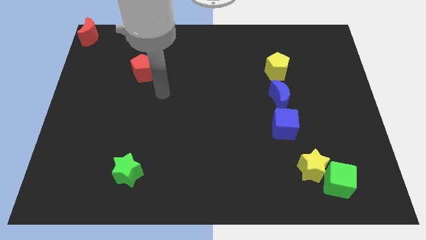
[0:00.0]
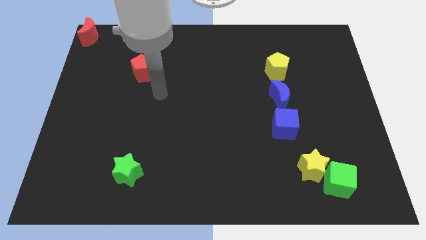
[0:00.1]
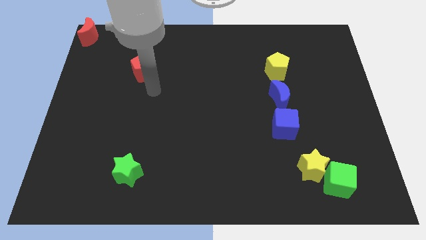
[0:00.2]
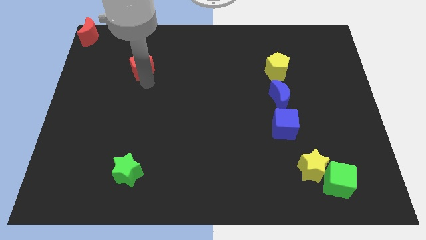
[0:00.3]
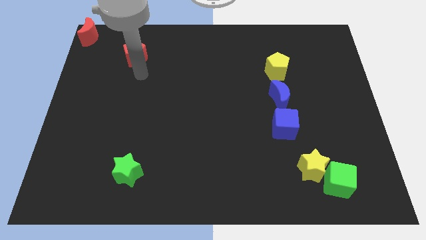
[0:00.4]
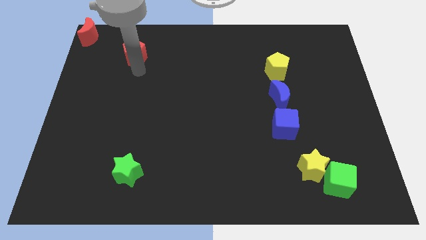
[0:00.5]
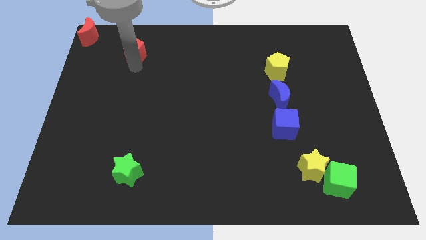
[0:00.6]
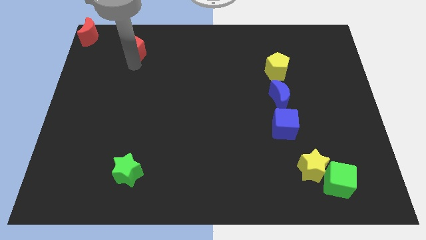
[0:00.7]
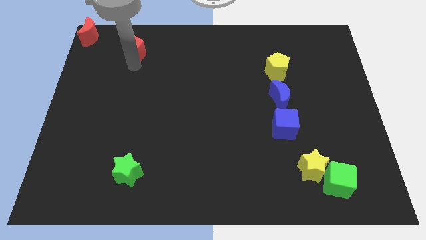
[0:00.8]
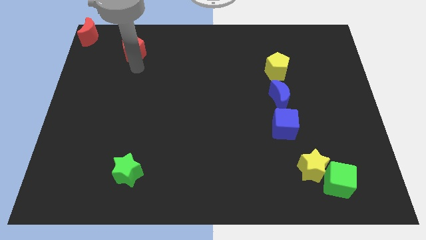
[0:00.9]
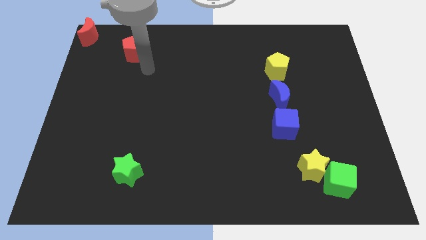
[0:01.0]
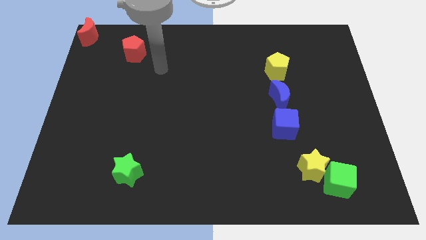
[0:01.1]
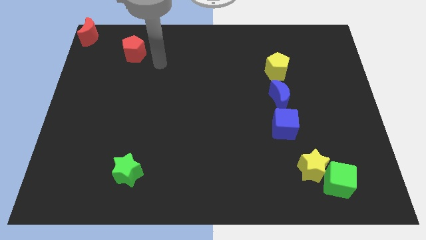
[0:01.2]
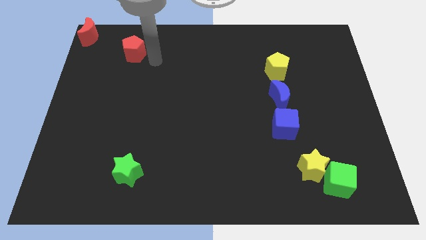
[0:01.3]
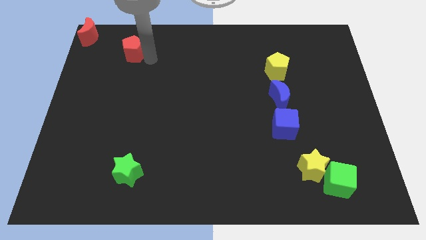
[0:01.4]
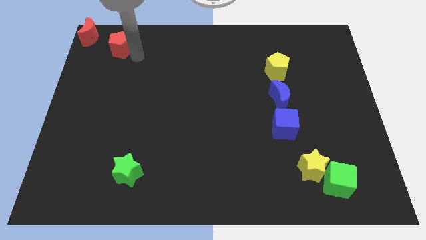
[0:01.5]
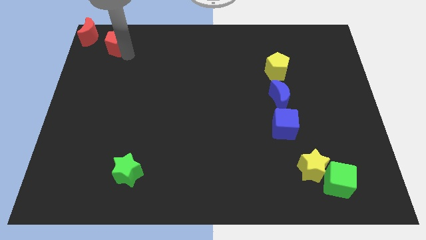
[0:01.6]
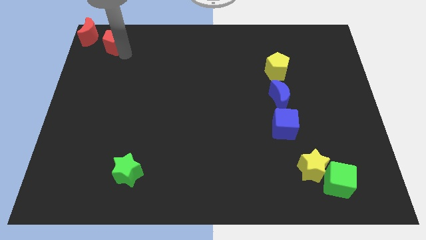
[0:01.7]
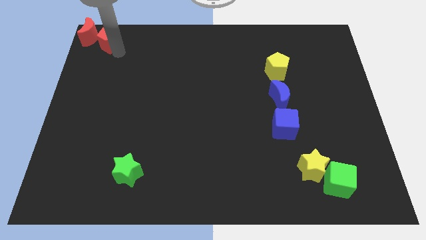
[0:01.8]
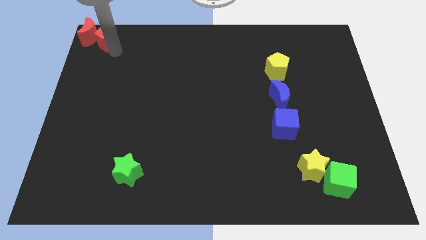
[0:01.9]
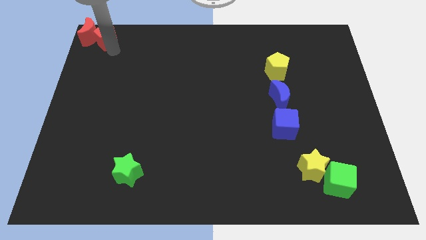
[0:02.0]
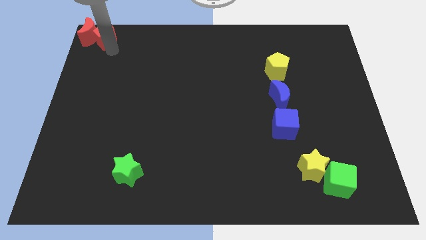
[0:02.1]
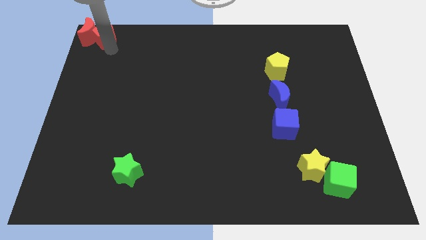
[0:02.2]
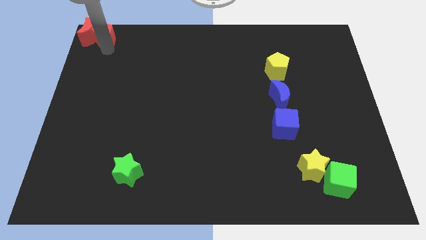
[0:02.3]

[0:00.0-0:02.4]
push the pentagon into the red crescent

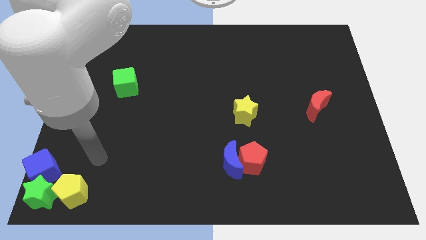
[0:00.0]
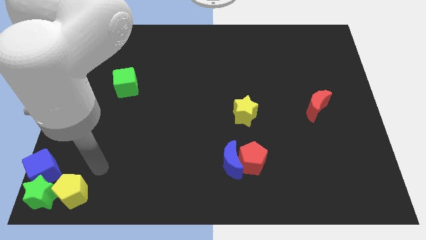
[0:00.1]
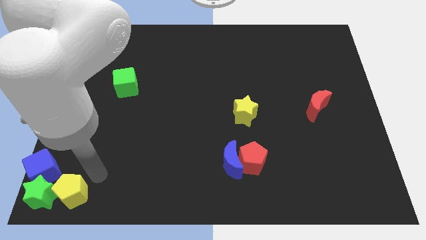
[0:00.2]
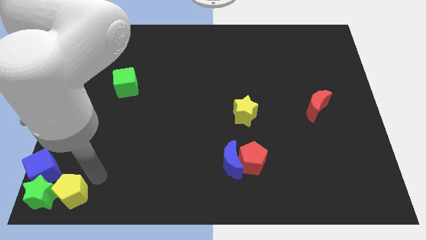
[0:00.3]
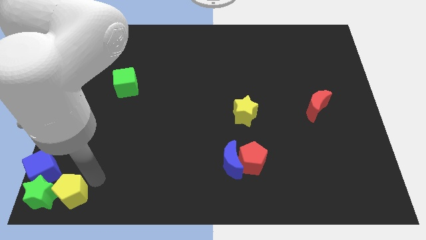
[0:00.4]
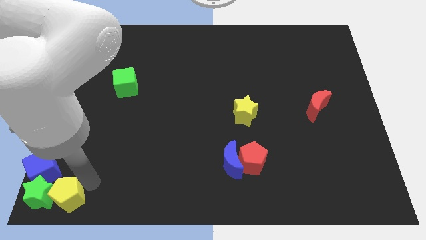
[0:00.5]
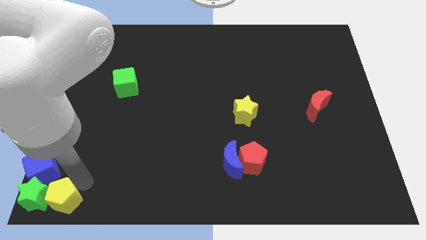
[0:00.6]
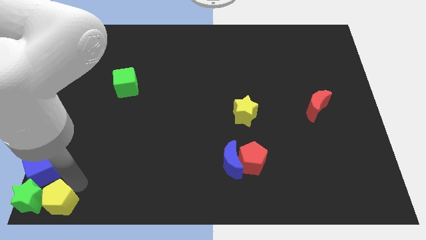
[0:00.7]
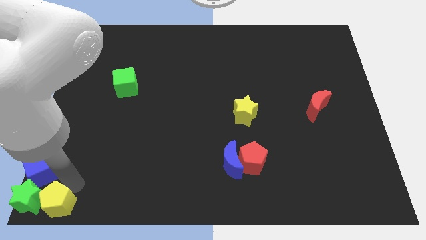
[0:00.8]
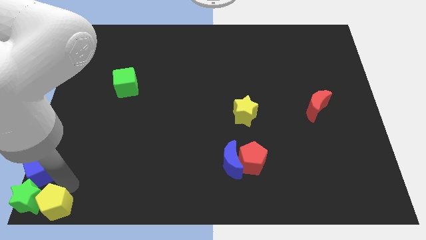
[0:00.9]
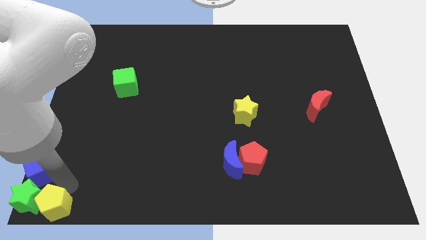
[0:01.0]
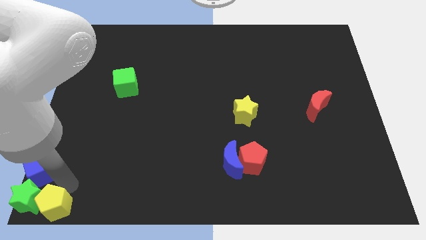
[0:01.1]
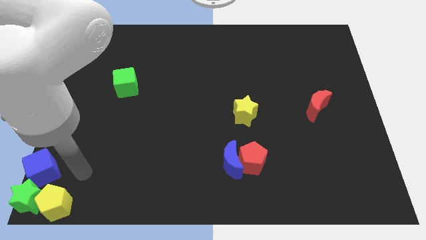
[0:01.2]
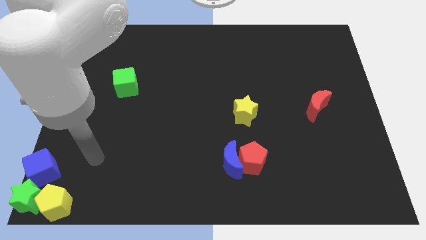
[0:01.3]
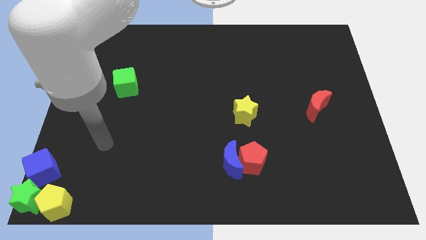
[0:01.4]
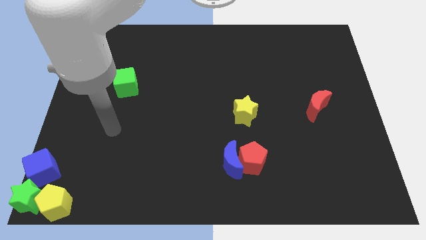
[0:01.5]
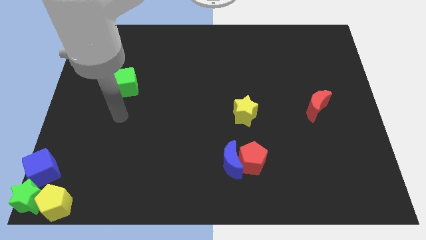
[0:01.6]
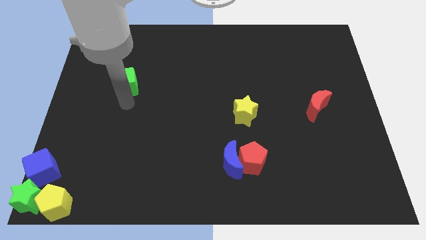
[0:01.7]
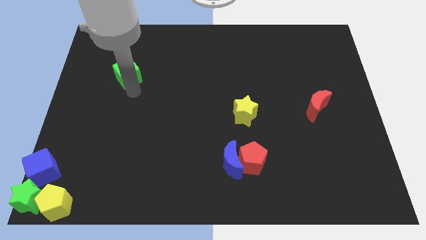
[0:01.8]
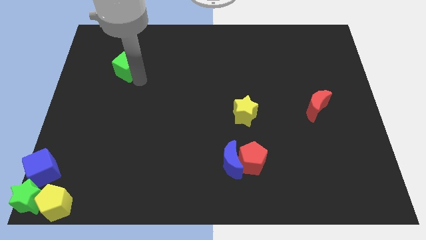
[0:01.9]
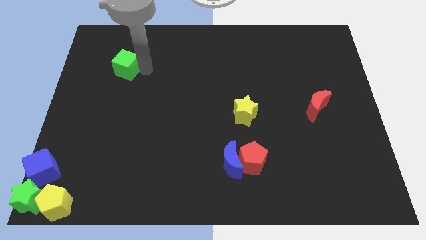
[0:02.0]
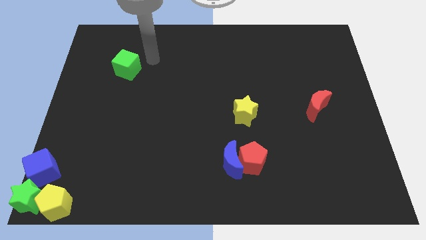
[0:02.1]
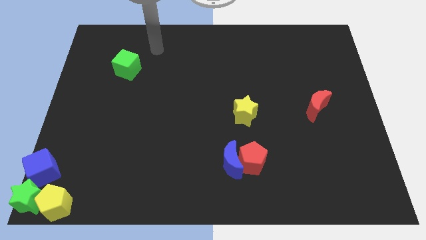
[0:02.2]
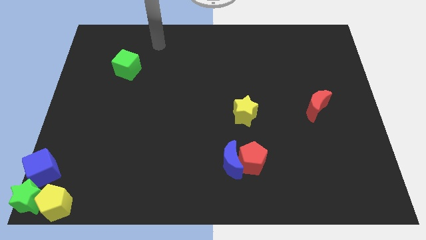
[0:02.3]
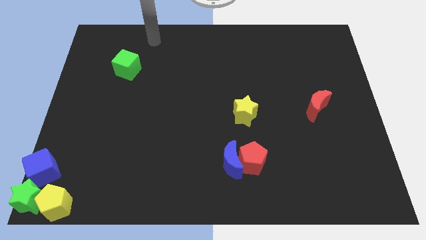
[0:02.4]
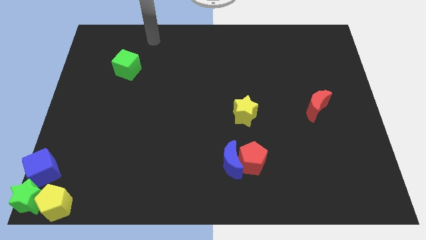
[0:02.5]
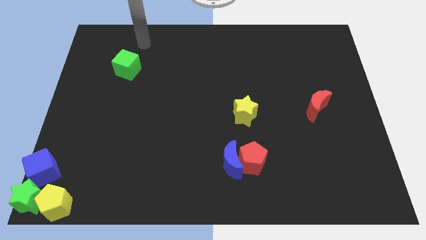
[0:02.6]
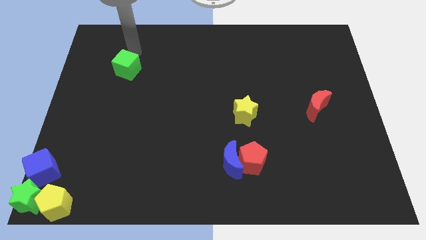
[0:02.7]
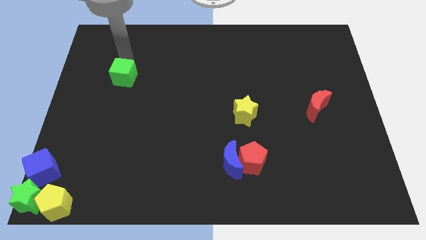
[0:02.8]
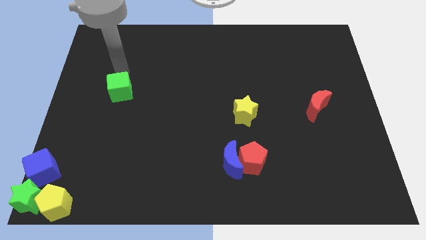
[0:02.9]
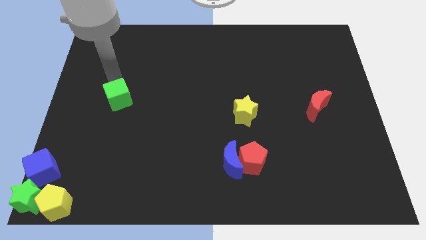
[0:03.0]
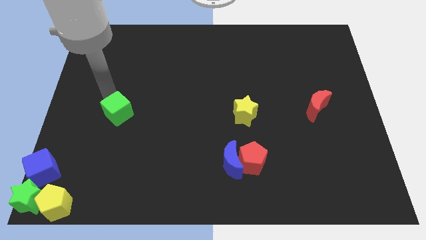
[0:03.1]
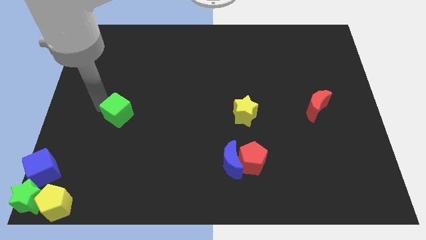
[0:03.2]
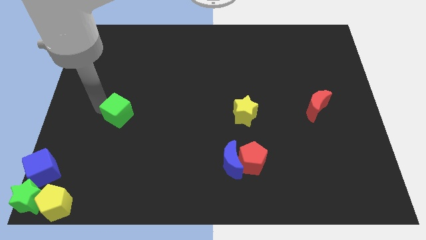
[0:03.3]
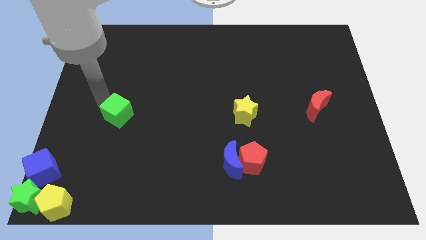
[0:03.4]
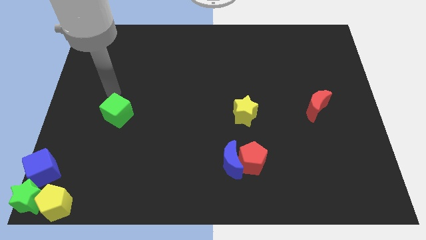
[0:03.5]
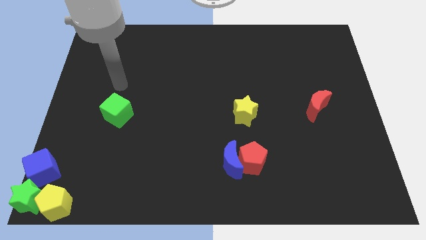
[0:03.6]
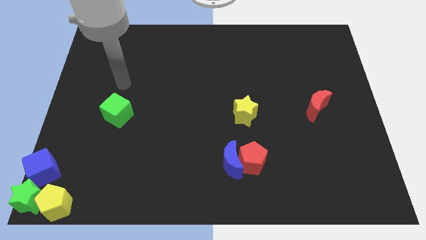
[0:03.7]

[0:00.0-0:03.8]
place the green cube parallel yellow star

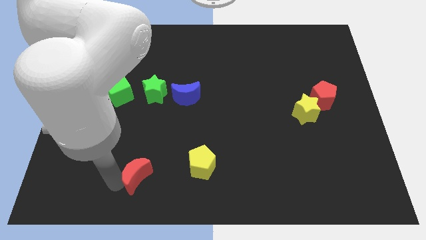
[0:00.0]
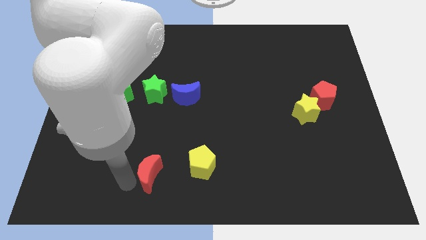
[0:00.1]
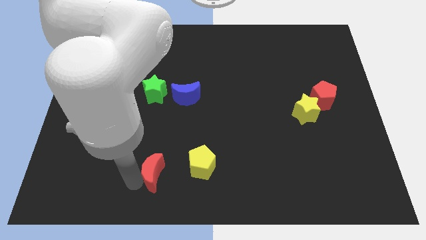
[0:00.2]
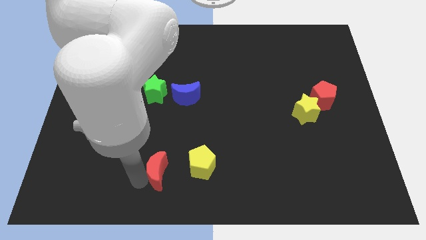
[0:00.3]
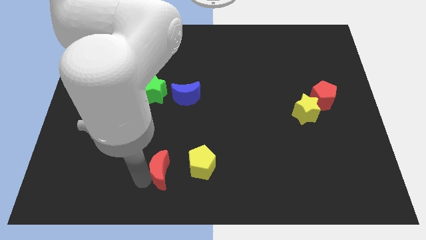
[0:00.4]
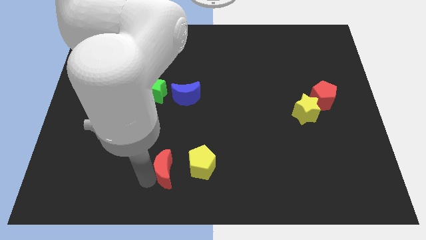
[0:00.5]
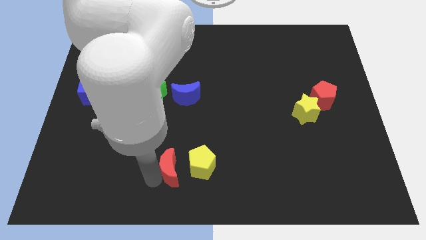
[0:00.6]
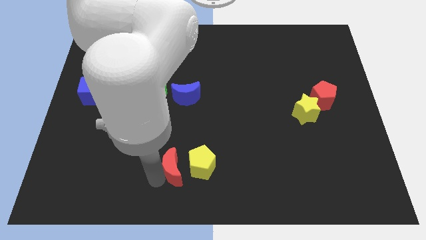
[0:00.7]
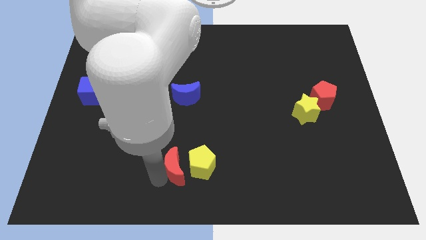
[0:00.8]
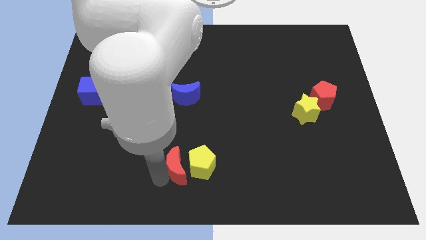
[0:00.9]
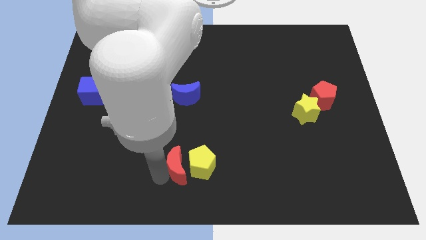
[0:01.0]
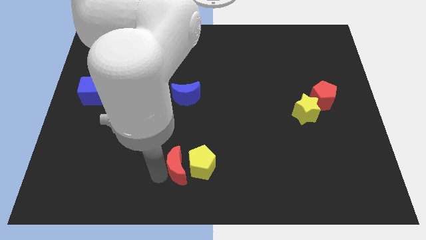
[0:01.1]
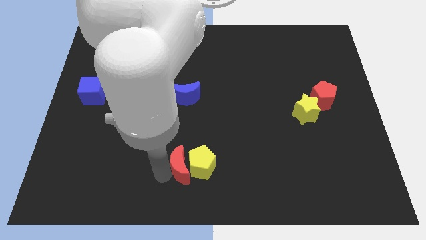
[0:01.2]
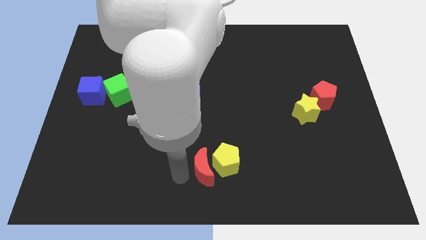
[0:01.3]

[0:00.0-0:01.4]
move the red moon to the left of yellow pentagon

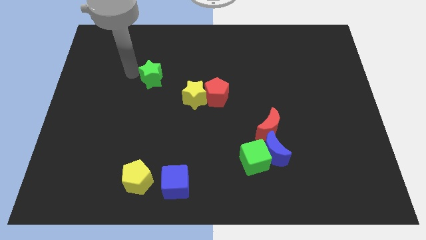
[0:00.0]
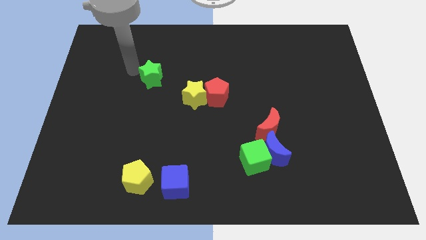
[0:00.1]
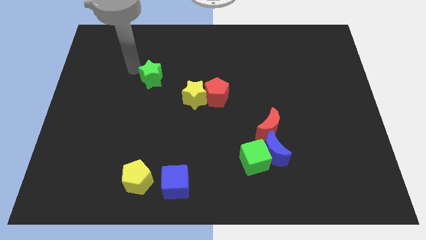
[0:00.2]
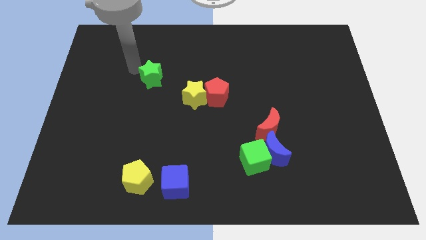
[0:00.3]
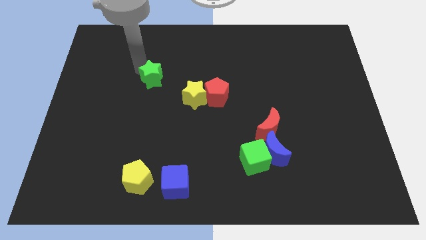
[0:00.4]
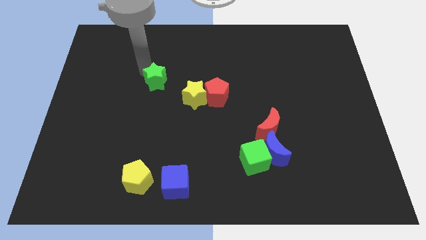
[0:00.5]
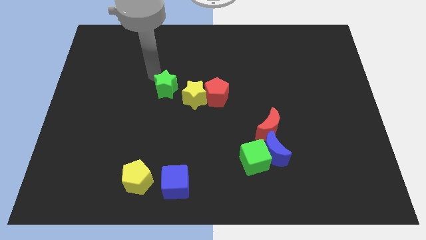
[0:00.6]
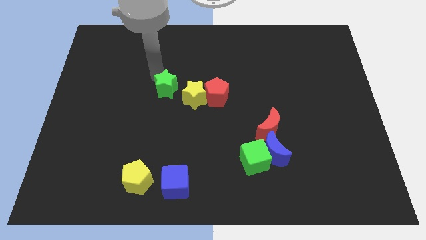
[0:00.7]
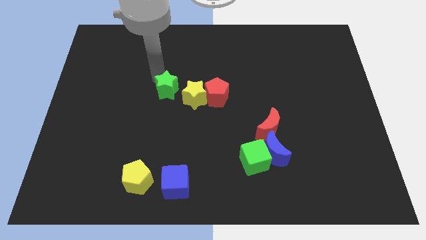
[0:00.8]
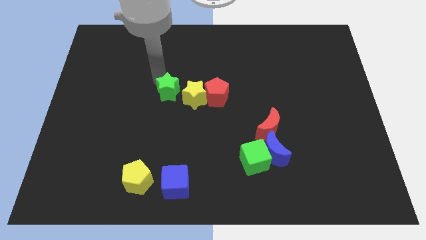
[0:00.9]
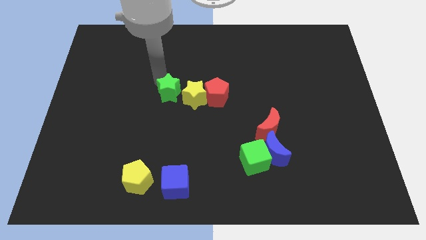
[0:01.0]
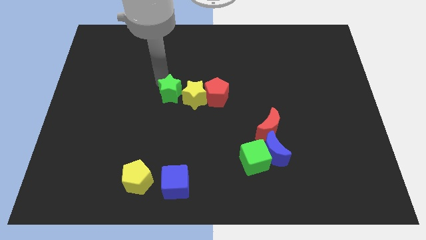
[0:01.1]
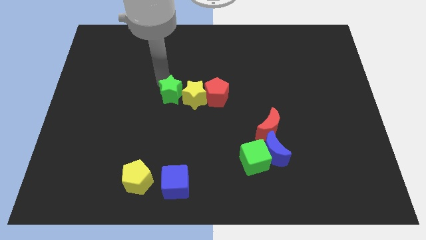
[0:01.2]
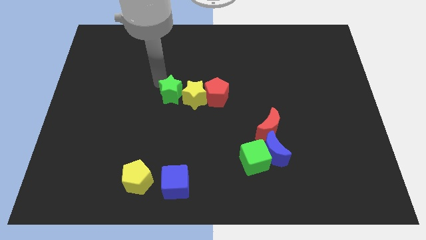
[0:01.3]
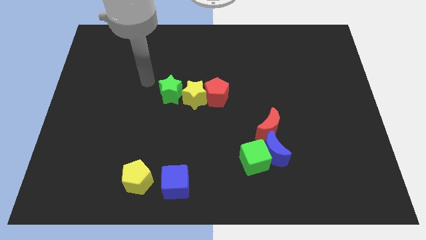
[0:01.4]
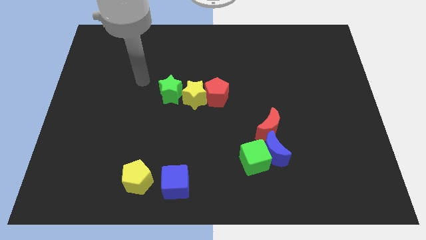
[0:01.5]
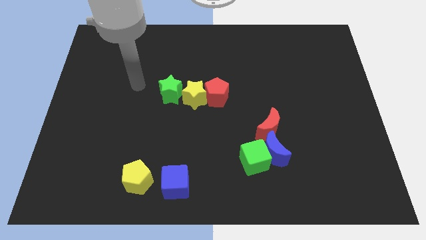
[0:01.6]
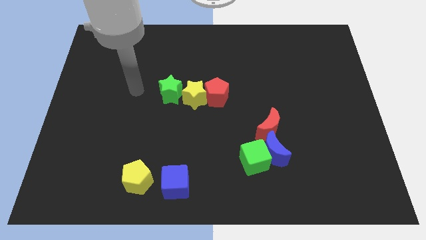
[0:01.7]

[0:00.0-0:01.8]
place the green star left to the yellow star
